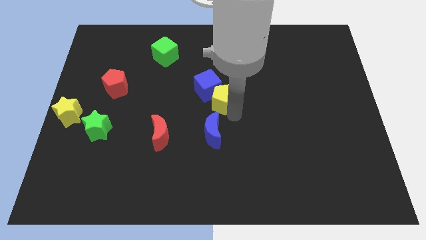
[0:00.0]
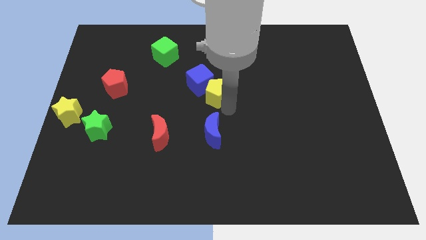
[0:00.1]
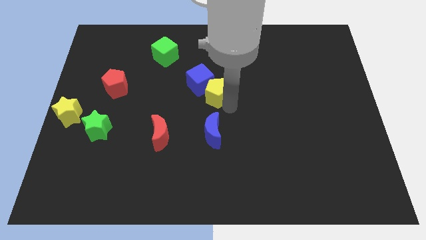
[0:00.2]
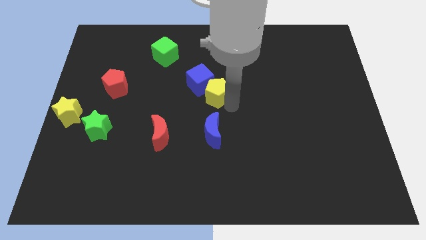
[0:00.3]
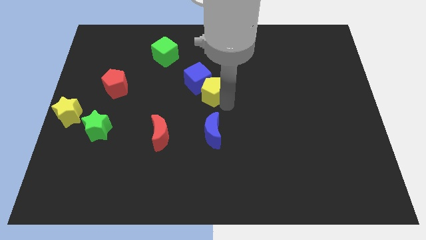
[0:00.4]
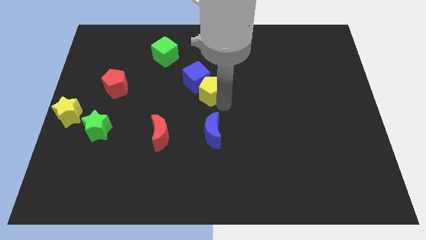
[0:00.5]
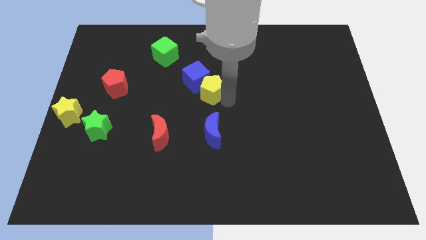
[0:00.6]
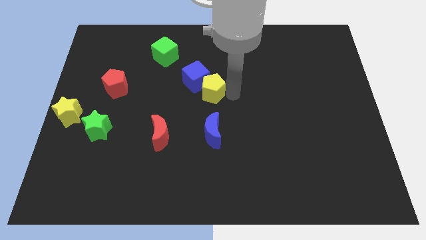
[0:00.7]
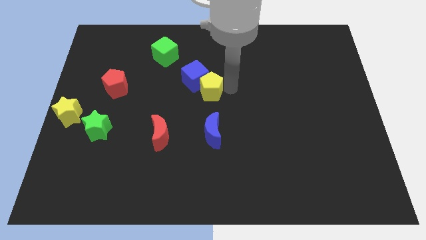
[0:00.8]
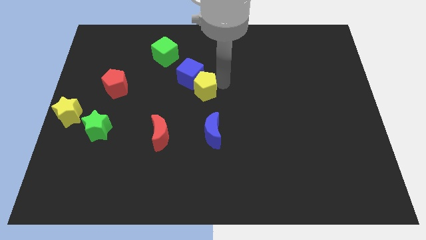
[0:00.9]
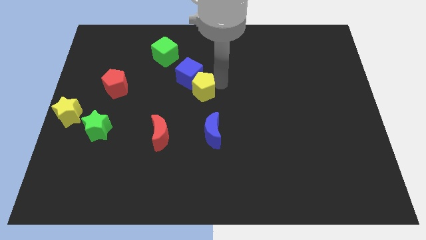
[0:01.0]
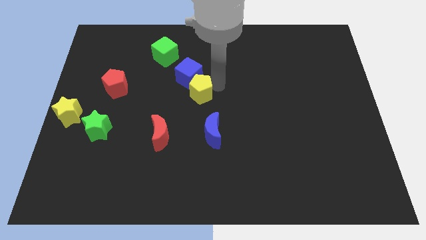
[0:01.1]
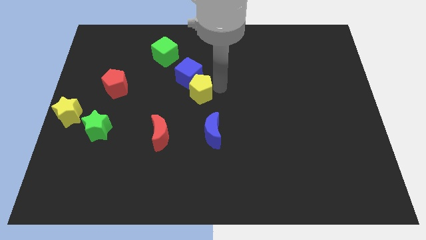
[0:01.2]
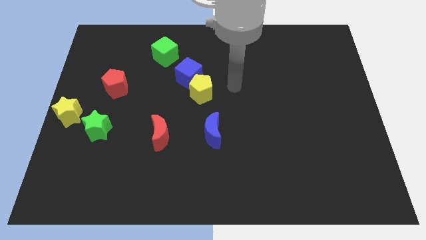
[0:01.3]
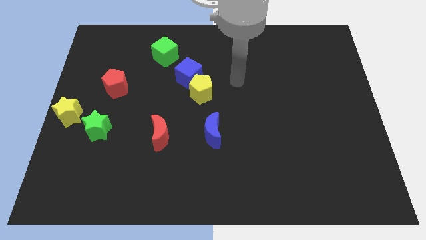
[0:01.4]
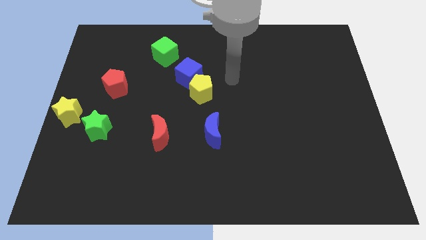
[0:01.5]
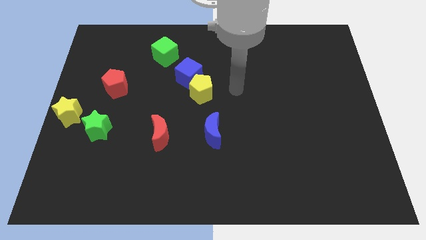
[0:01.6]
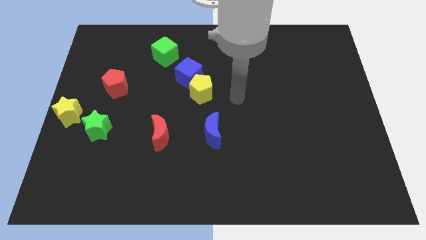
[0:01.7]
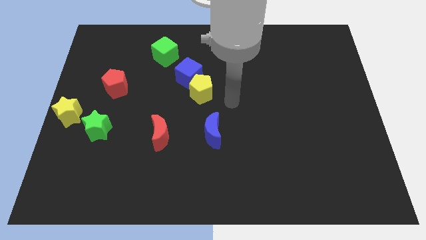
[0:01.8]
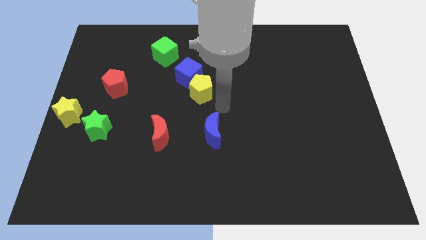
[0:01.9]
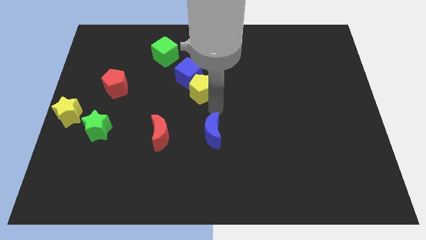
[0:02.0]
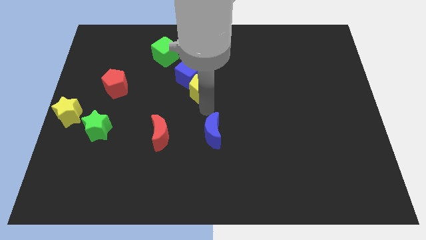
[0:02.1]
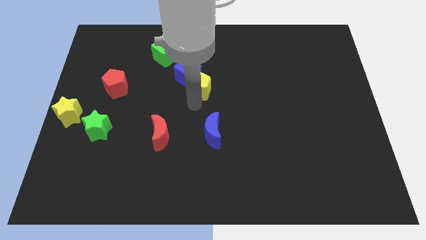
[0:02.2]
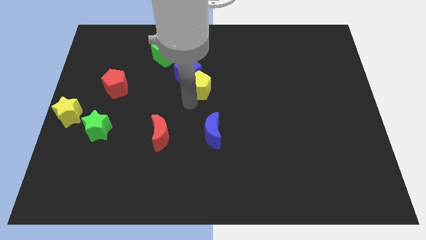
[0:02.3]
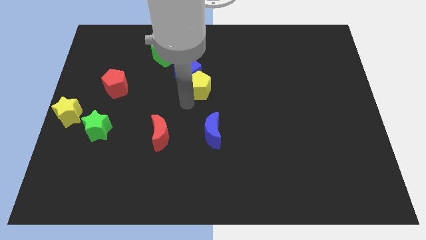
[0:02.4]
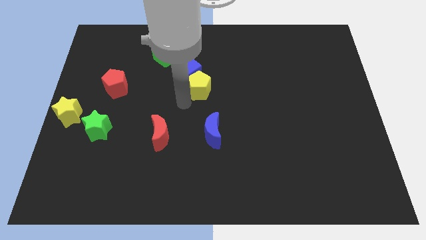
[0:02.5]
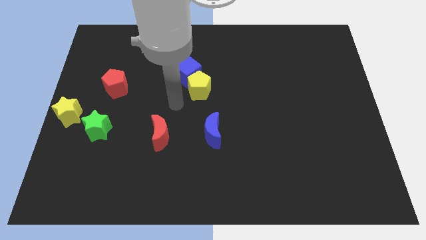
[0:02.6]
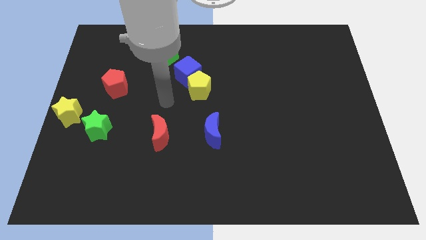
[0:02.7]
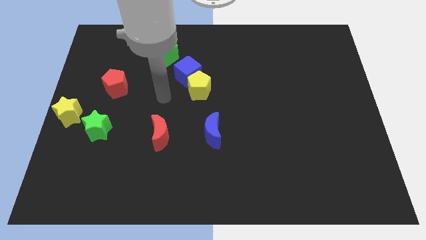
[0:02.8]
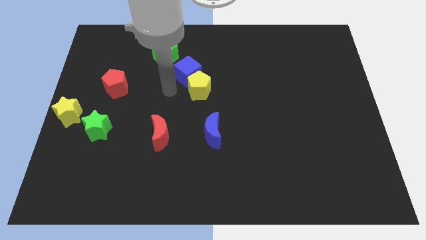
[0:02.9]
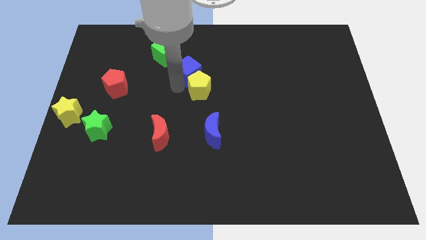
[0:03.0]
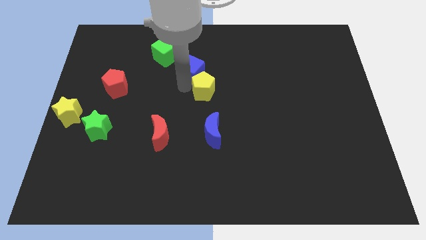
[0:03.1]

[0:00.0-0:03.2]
push the yellow pentagon and blue cube slightly to the top

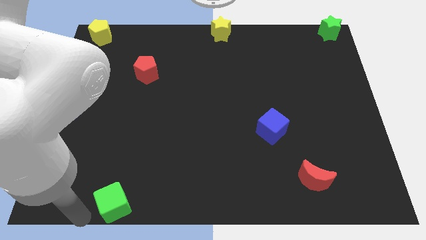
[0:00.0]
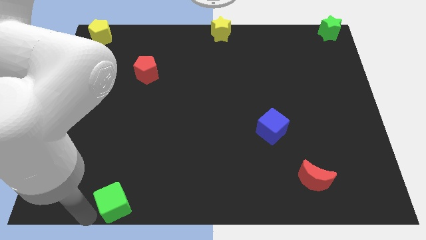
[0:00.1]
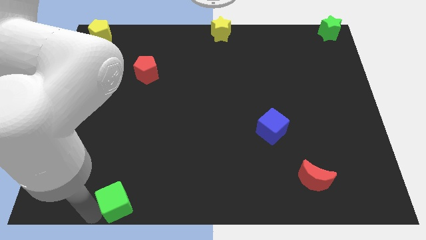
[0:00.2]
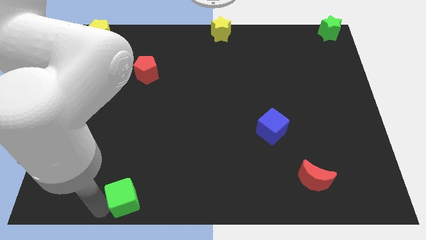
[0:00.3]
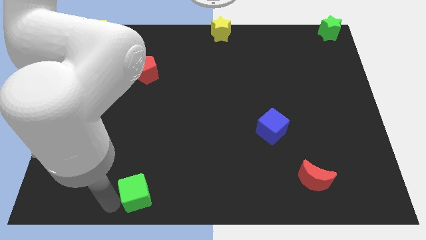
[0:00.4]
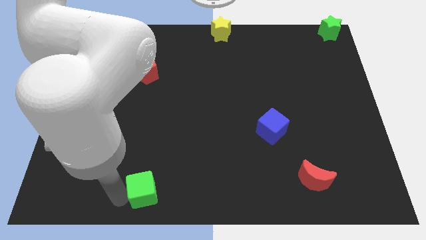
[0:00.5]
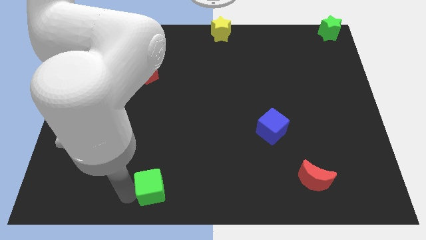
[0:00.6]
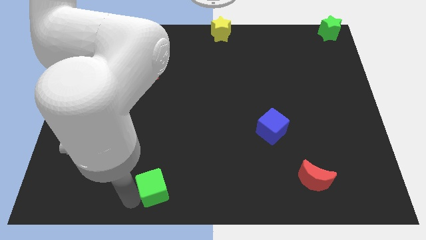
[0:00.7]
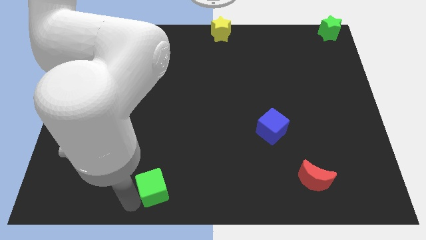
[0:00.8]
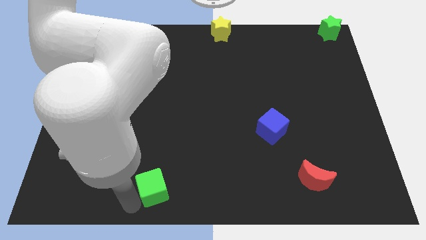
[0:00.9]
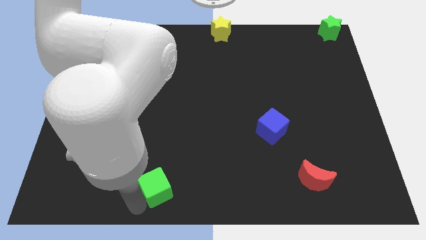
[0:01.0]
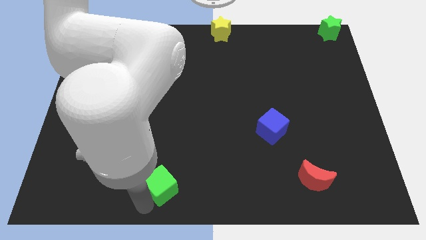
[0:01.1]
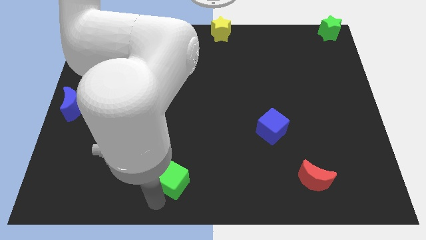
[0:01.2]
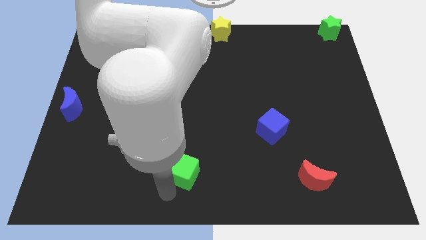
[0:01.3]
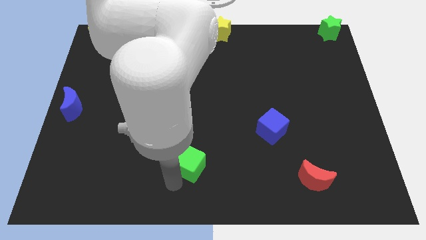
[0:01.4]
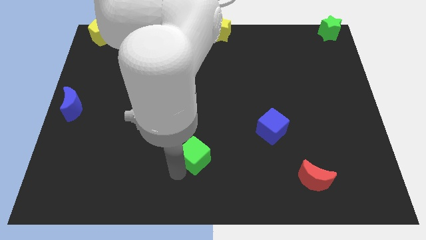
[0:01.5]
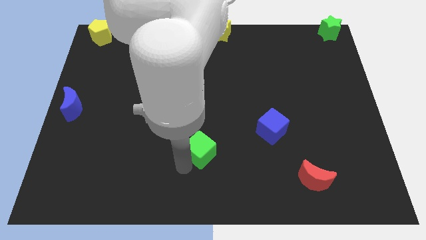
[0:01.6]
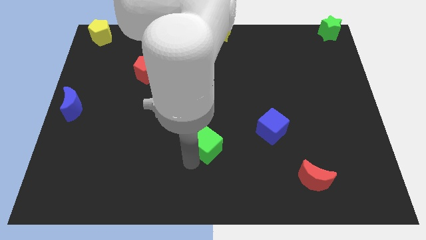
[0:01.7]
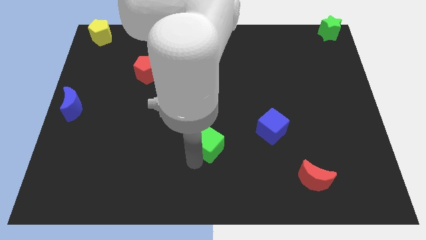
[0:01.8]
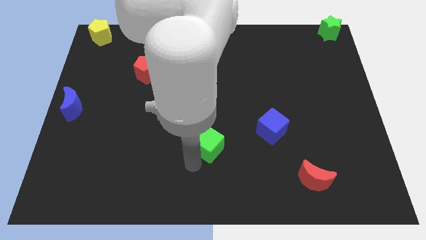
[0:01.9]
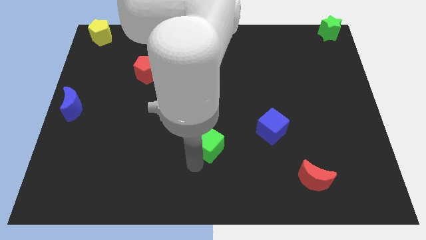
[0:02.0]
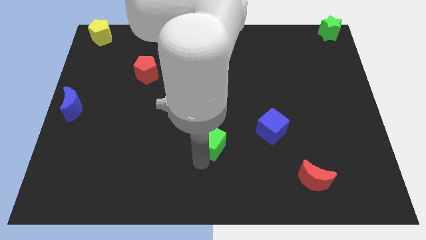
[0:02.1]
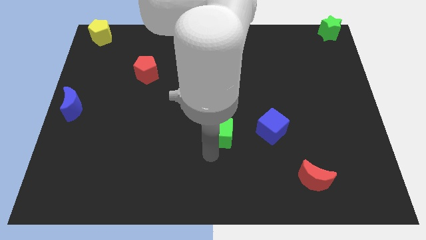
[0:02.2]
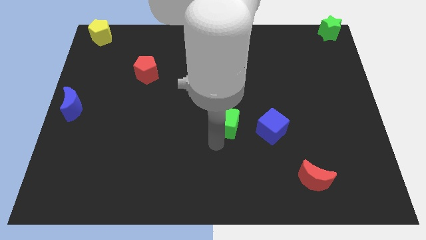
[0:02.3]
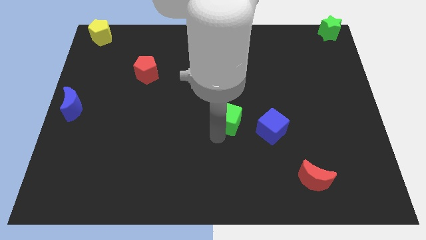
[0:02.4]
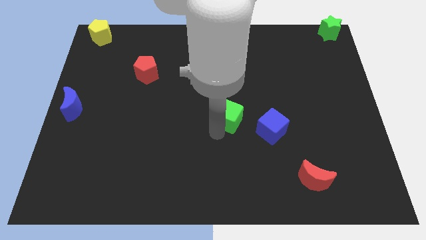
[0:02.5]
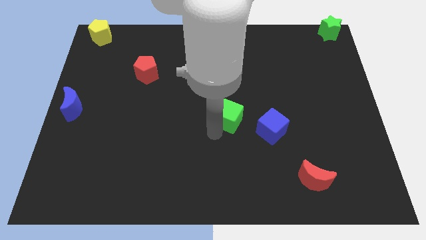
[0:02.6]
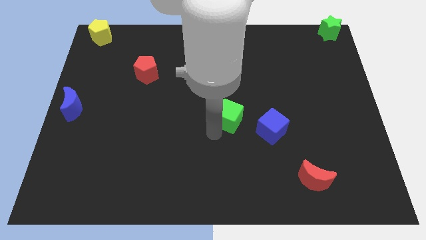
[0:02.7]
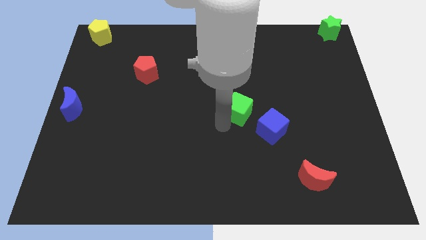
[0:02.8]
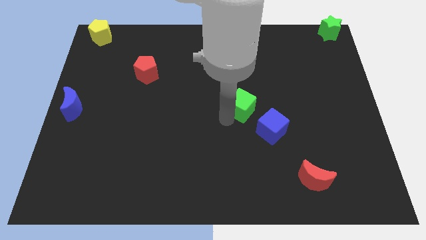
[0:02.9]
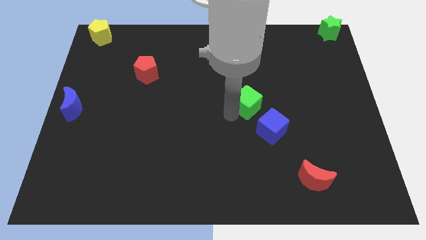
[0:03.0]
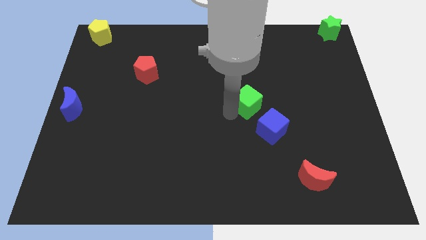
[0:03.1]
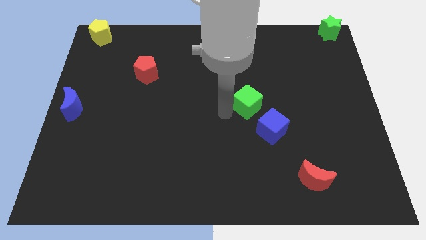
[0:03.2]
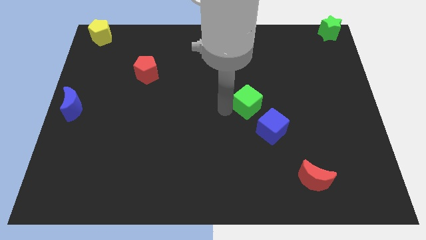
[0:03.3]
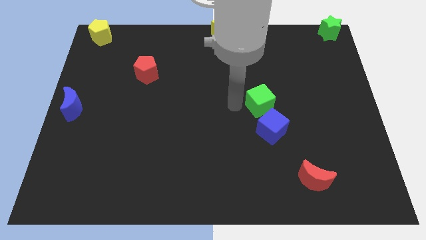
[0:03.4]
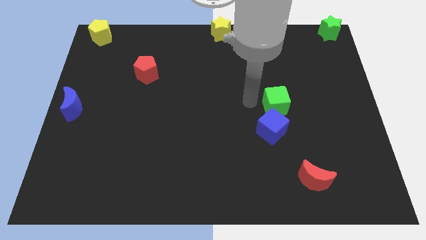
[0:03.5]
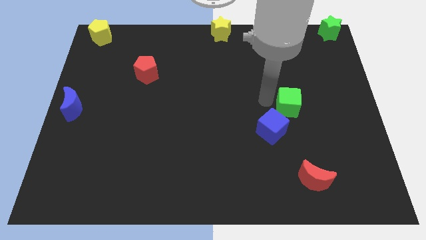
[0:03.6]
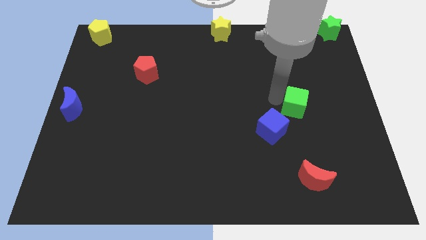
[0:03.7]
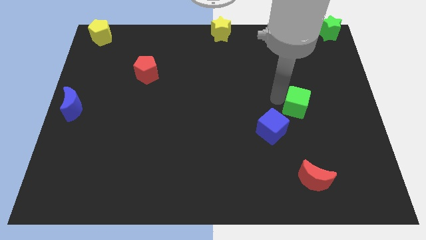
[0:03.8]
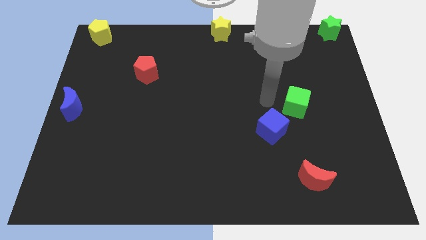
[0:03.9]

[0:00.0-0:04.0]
place the green cube towards the top right side of the blue cube

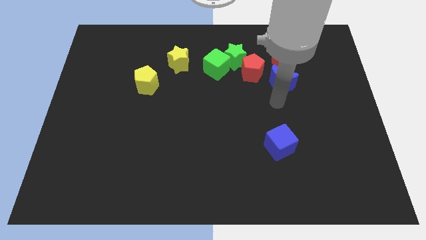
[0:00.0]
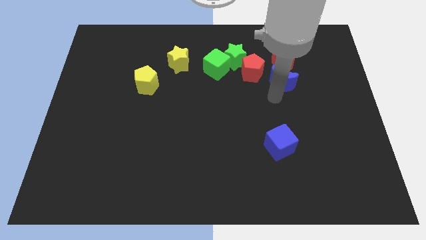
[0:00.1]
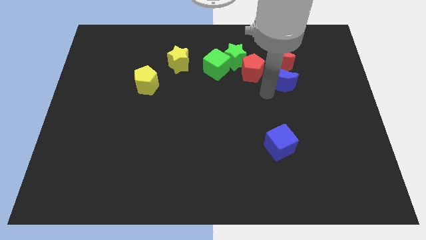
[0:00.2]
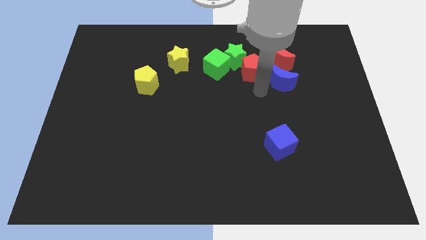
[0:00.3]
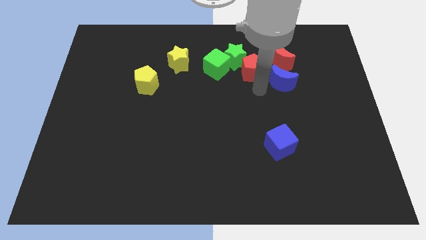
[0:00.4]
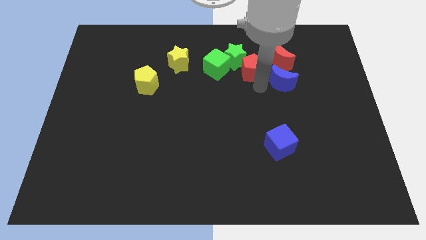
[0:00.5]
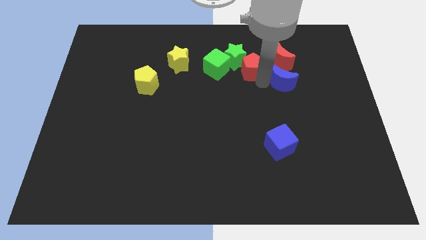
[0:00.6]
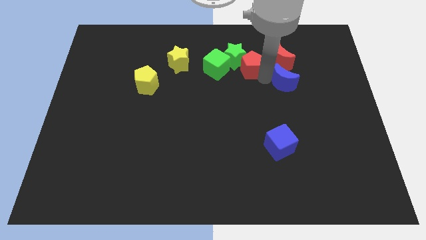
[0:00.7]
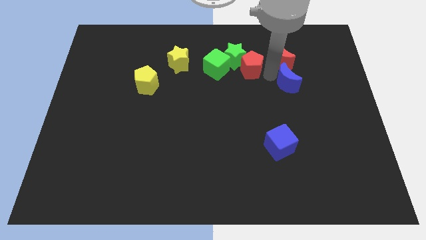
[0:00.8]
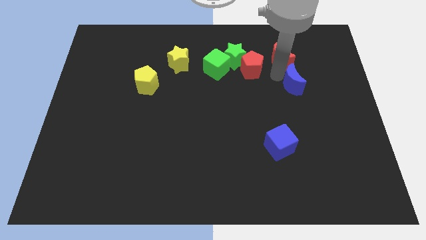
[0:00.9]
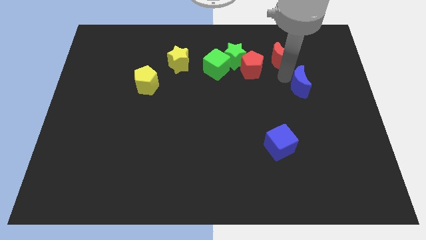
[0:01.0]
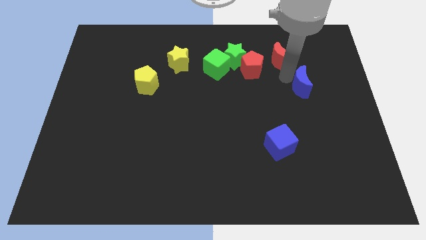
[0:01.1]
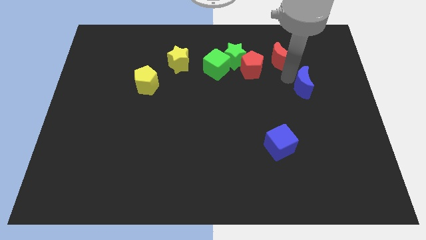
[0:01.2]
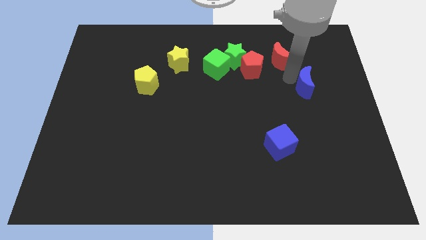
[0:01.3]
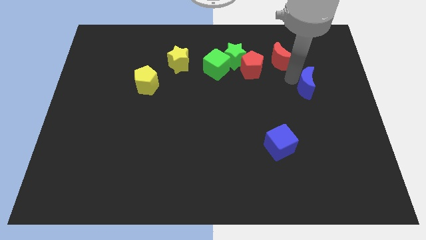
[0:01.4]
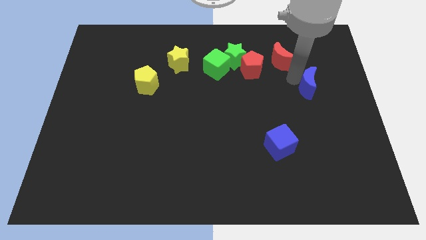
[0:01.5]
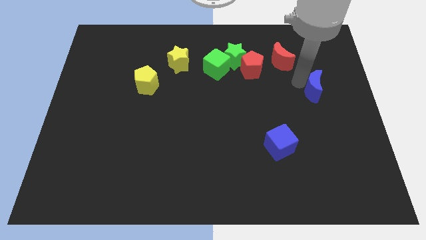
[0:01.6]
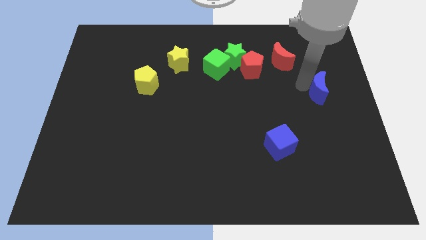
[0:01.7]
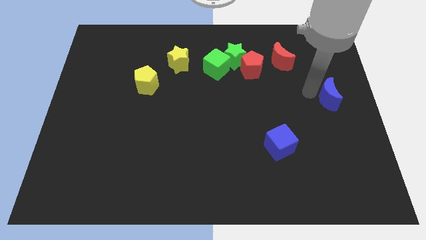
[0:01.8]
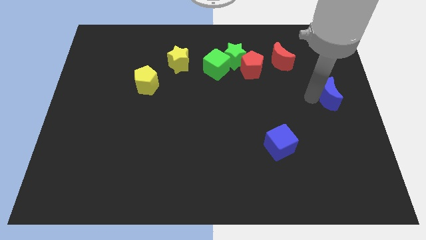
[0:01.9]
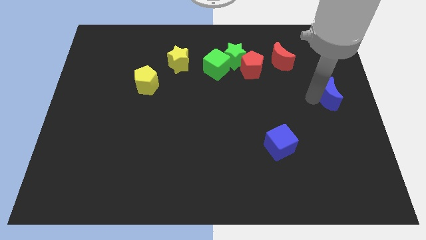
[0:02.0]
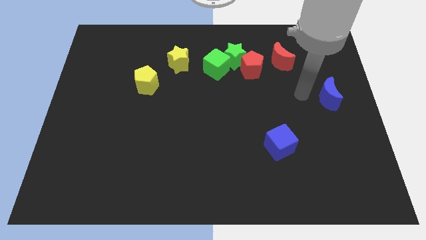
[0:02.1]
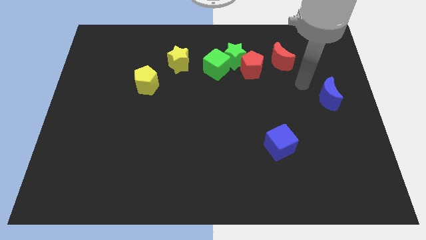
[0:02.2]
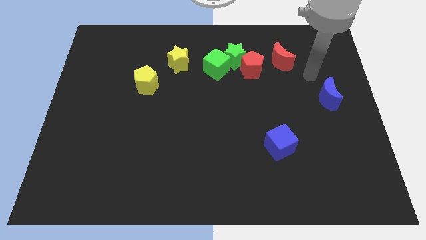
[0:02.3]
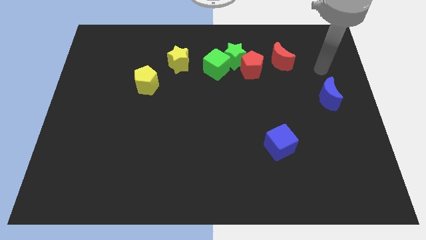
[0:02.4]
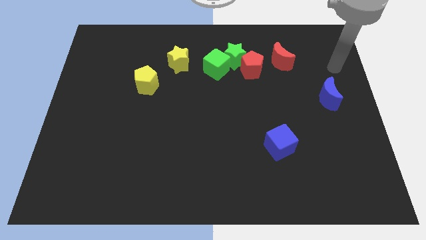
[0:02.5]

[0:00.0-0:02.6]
move the blue moon to the right
